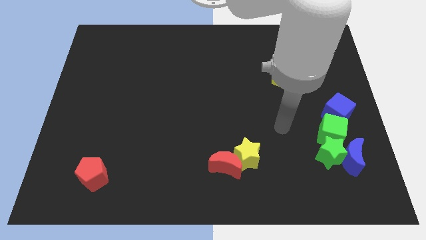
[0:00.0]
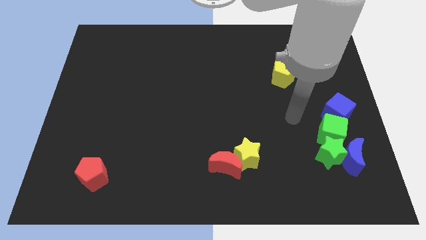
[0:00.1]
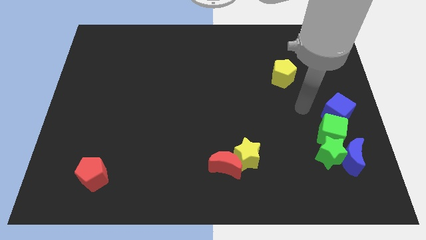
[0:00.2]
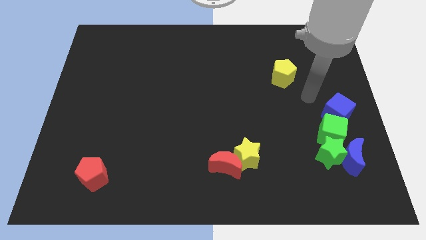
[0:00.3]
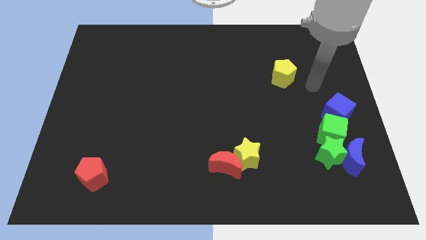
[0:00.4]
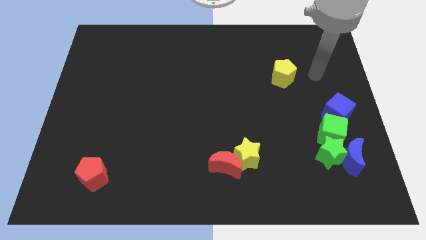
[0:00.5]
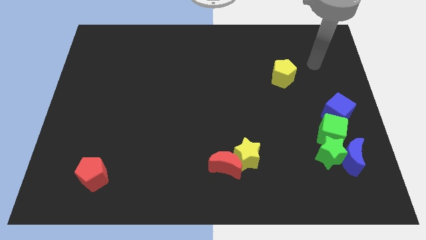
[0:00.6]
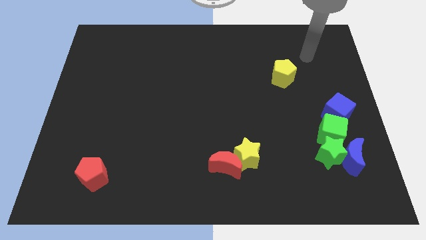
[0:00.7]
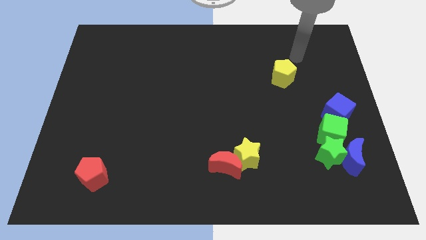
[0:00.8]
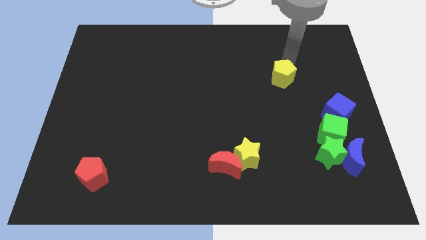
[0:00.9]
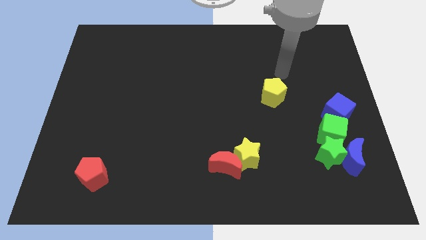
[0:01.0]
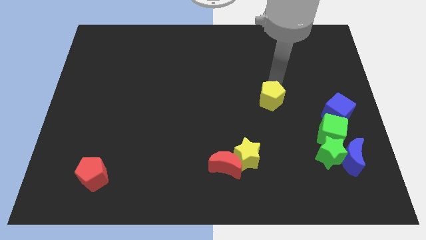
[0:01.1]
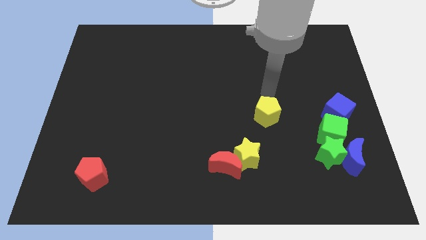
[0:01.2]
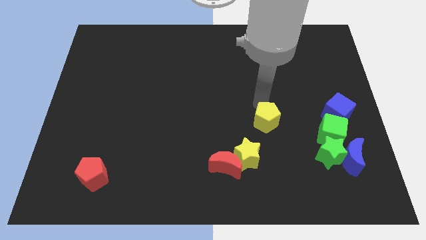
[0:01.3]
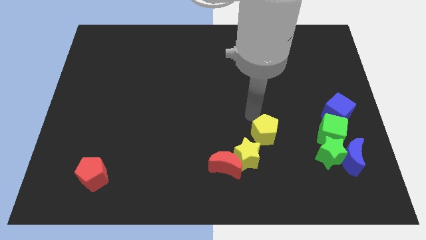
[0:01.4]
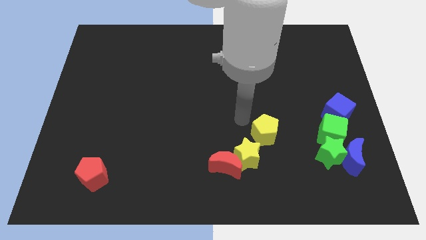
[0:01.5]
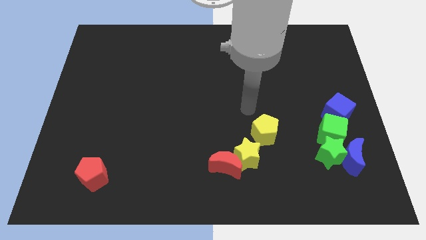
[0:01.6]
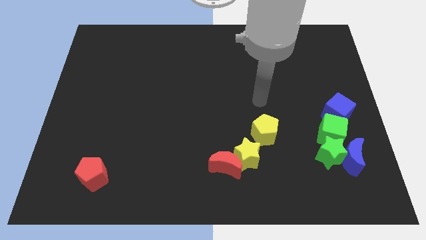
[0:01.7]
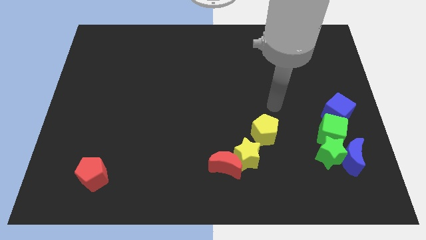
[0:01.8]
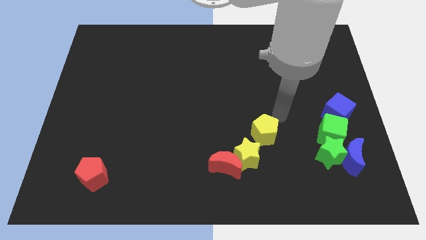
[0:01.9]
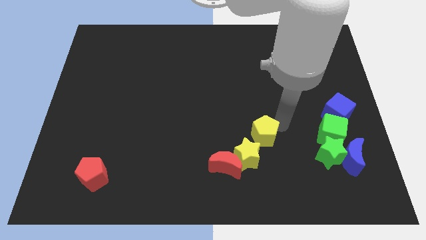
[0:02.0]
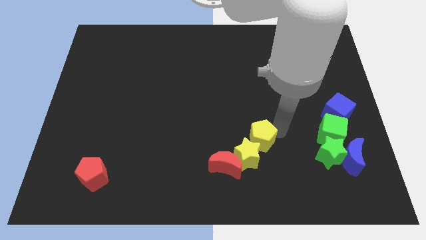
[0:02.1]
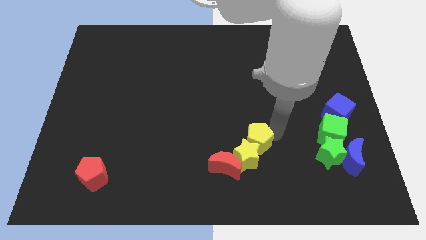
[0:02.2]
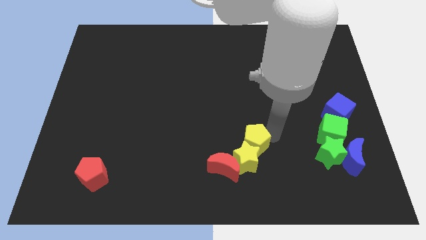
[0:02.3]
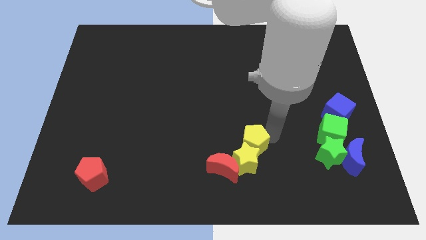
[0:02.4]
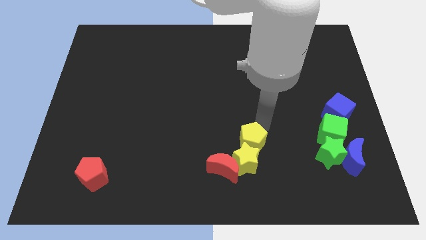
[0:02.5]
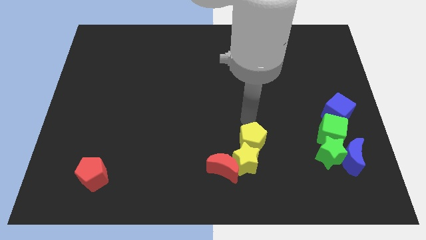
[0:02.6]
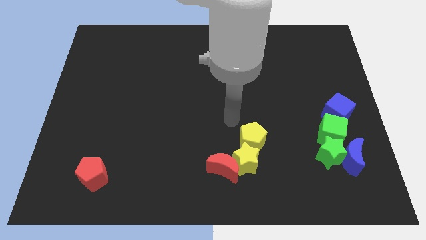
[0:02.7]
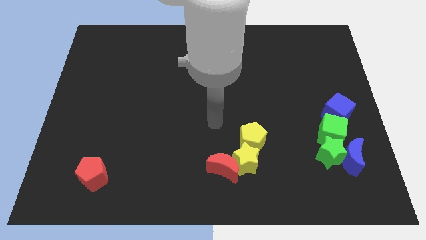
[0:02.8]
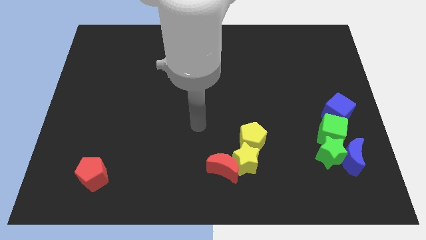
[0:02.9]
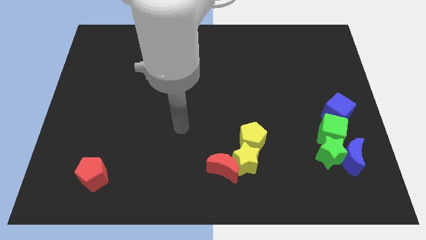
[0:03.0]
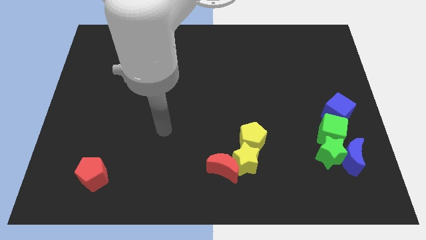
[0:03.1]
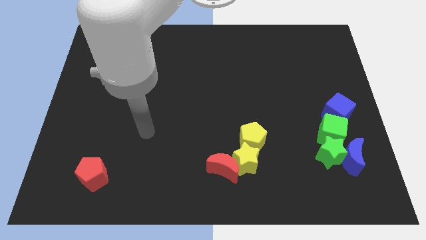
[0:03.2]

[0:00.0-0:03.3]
push the yellow pentagon into the yellow star

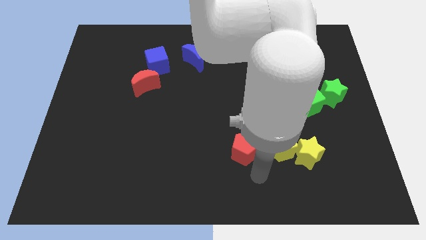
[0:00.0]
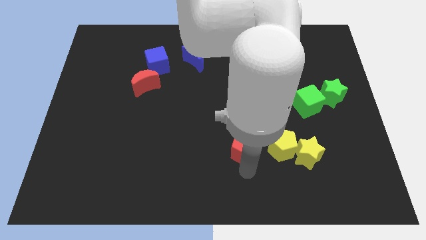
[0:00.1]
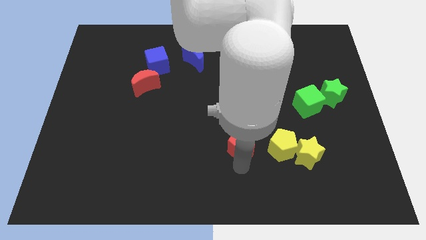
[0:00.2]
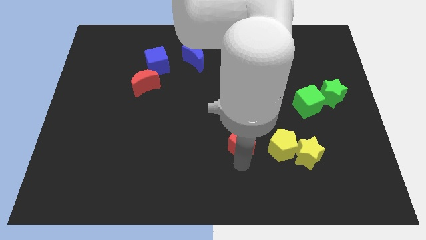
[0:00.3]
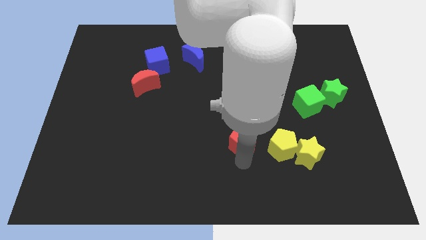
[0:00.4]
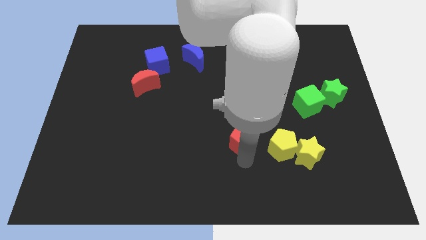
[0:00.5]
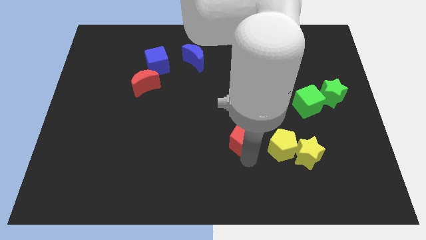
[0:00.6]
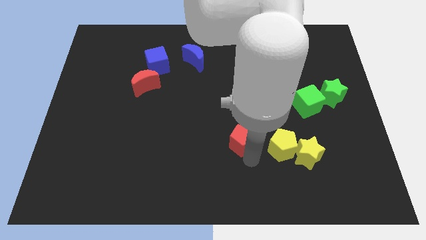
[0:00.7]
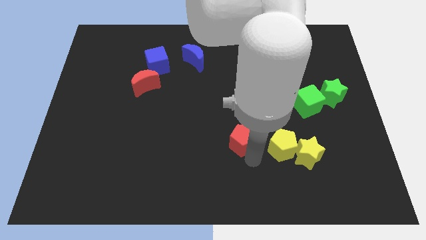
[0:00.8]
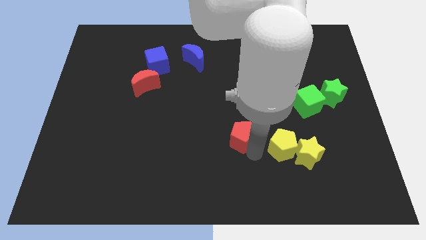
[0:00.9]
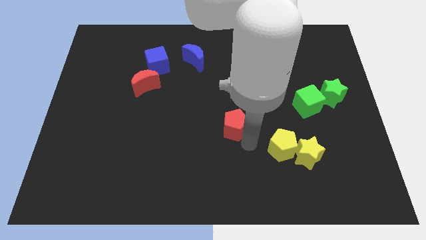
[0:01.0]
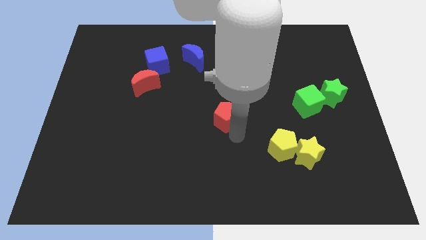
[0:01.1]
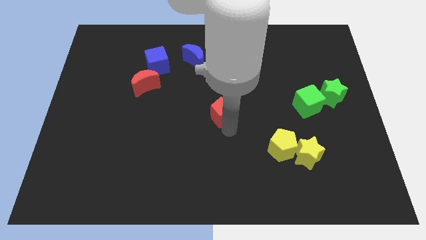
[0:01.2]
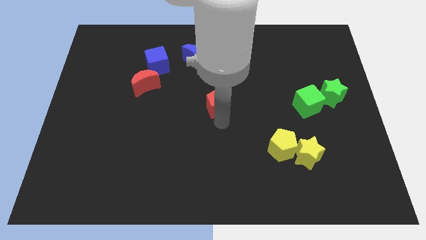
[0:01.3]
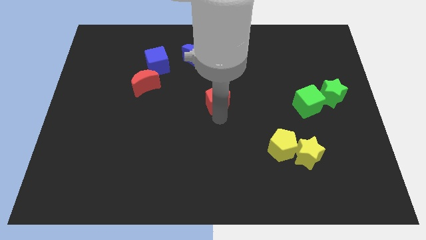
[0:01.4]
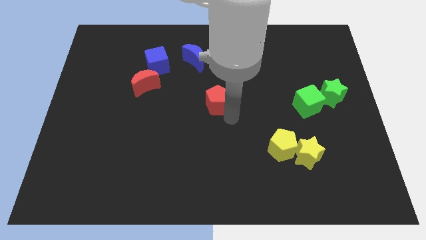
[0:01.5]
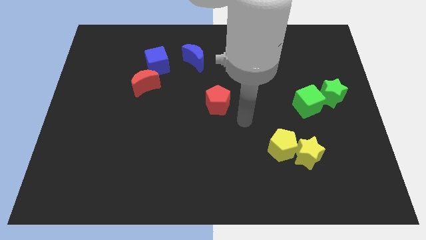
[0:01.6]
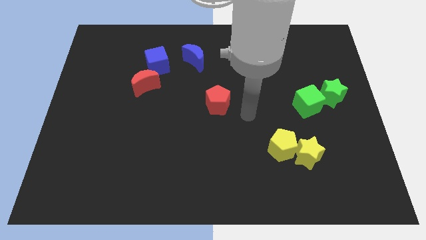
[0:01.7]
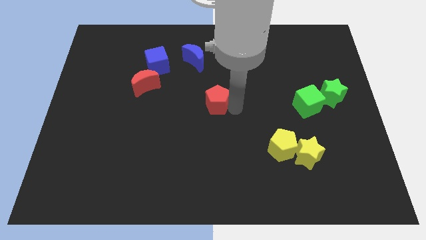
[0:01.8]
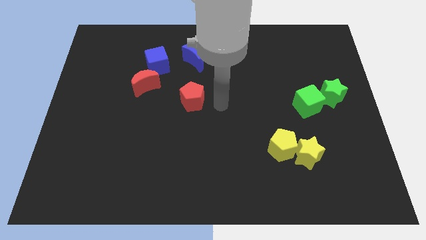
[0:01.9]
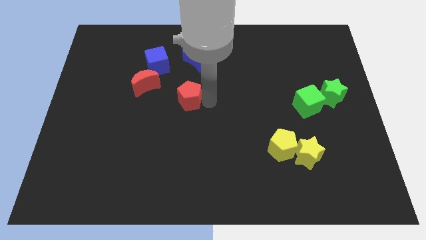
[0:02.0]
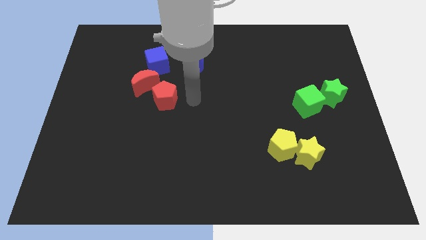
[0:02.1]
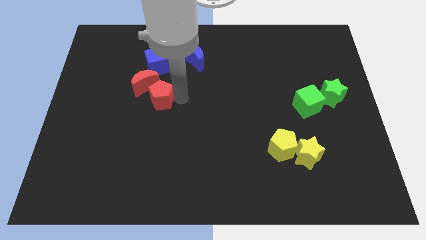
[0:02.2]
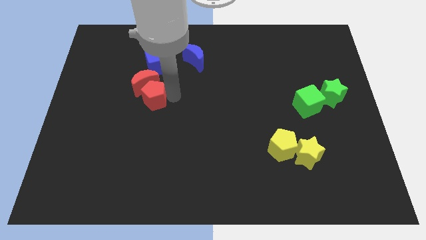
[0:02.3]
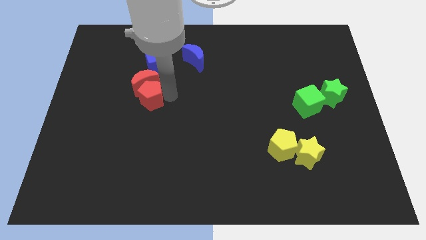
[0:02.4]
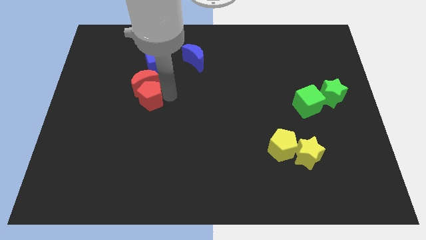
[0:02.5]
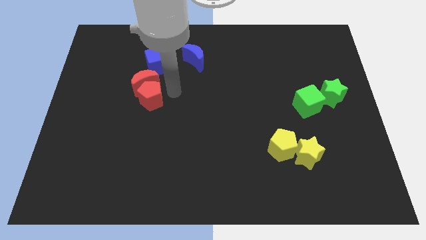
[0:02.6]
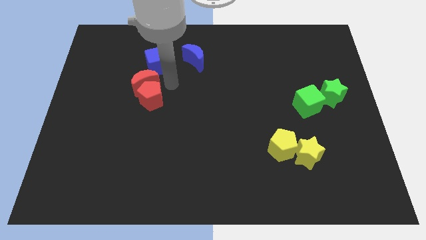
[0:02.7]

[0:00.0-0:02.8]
push the red pentagon down to the red moon

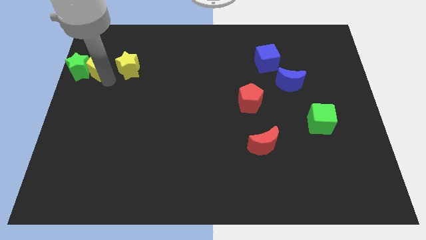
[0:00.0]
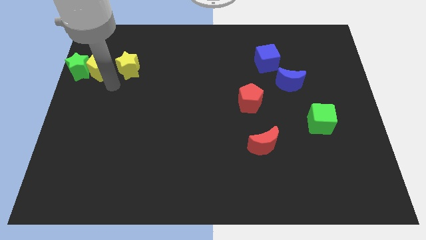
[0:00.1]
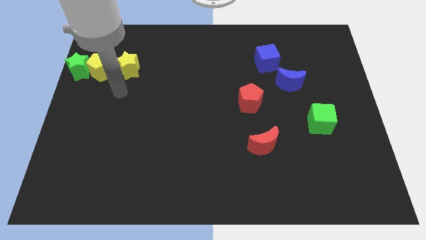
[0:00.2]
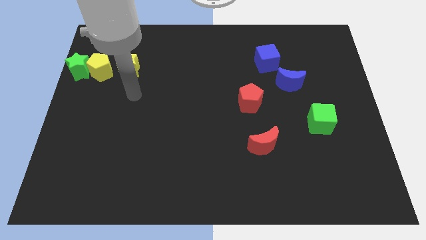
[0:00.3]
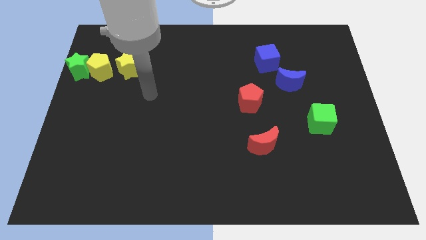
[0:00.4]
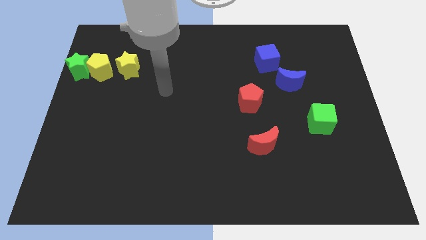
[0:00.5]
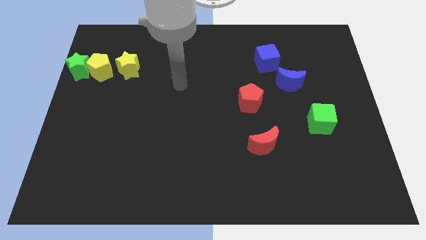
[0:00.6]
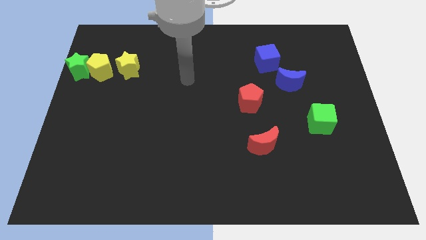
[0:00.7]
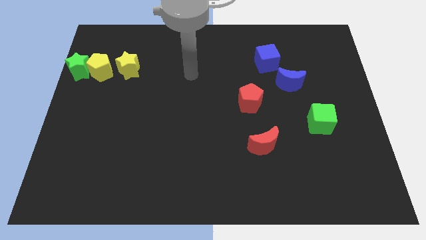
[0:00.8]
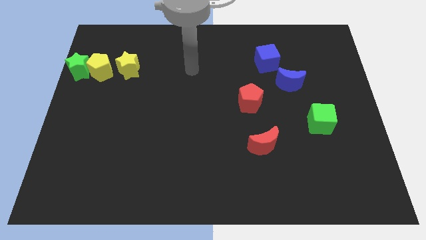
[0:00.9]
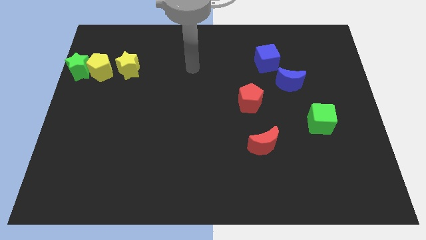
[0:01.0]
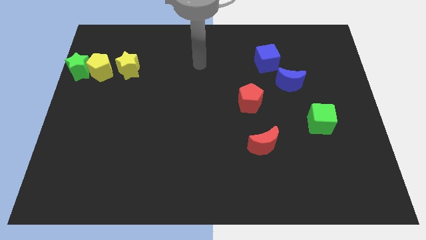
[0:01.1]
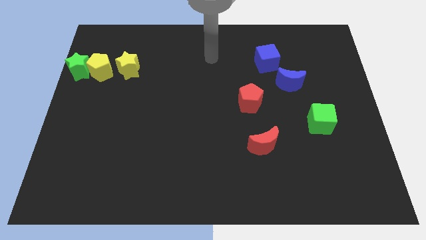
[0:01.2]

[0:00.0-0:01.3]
move your arm away from the yellow pentagon

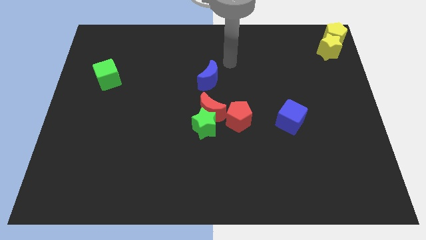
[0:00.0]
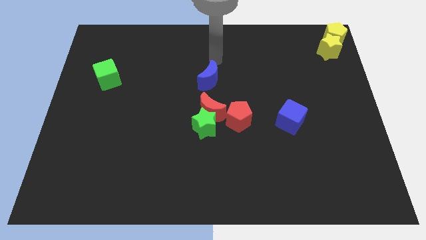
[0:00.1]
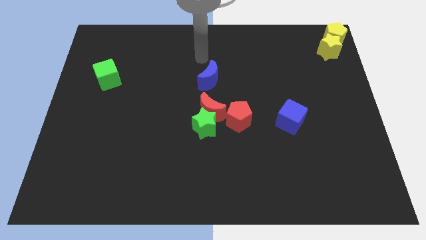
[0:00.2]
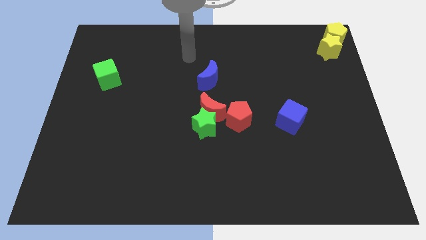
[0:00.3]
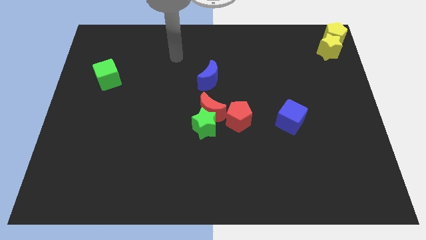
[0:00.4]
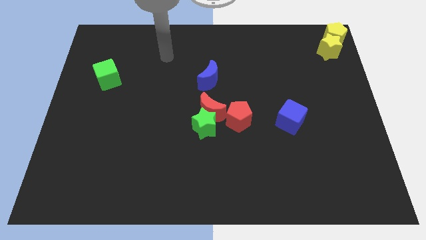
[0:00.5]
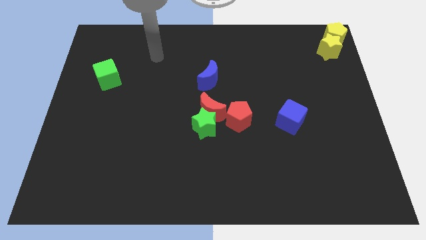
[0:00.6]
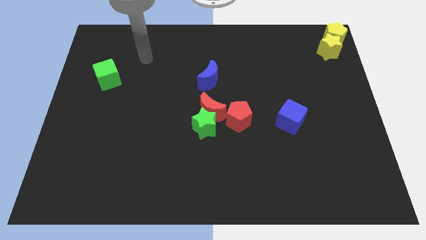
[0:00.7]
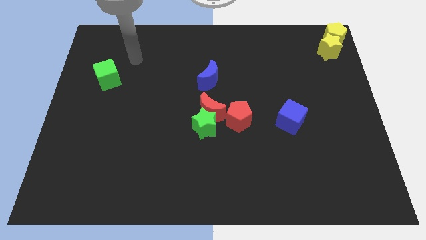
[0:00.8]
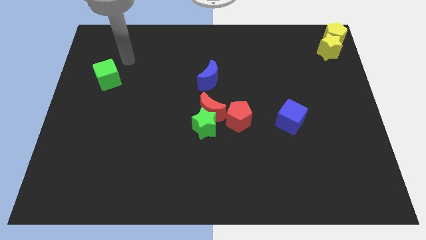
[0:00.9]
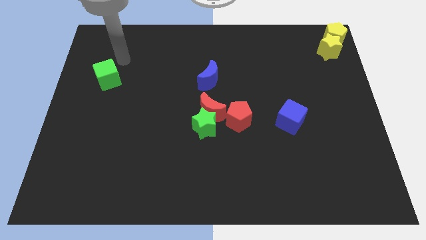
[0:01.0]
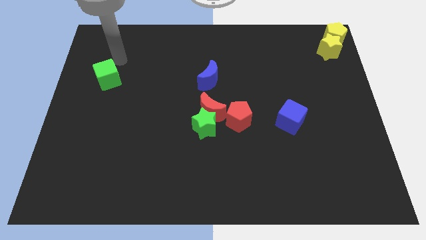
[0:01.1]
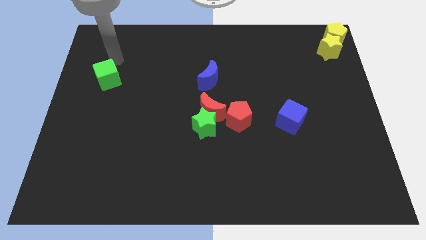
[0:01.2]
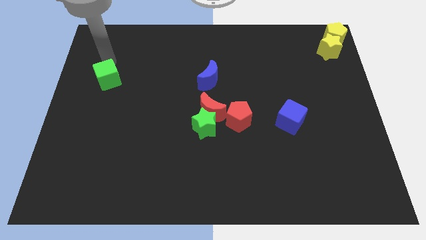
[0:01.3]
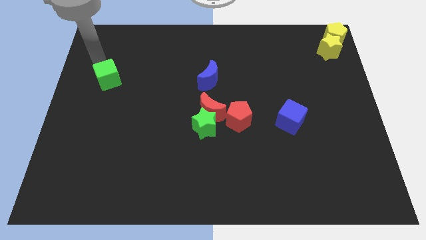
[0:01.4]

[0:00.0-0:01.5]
move the hand on the top of the green cube

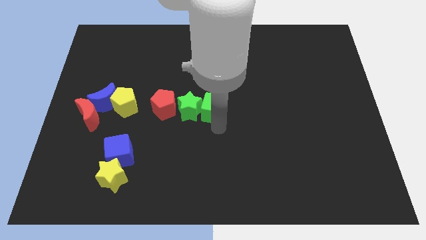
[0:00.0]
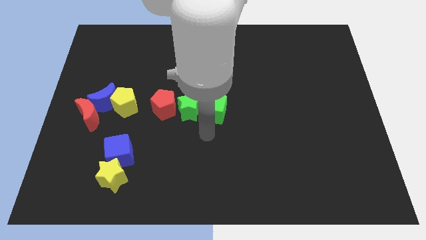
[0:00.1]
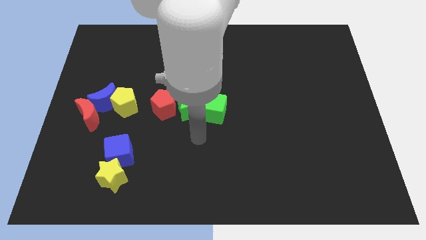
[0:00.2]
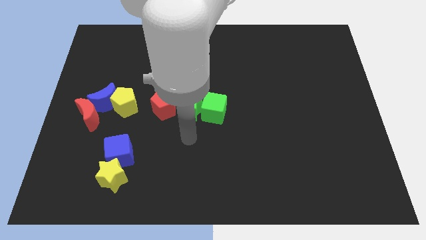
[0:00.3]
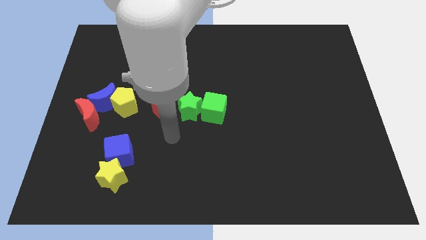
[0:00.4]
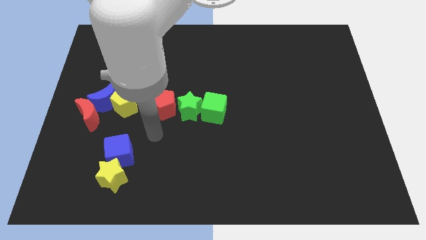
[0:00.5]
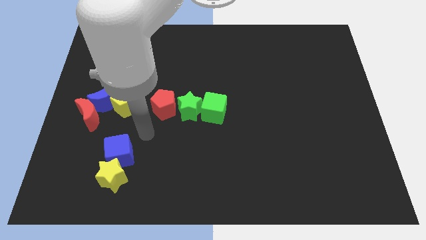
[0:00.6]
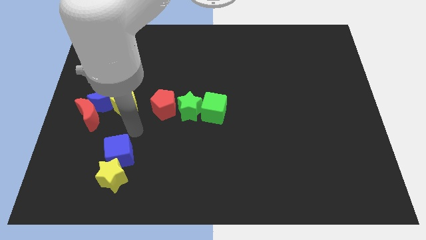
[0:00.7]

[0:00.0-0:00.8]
move the arm away from the green cube
